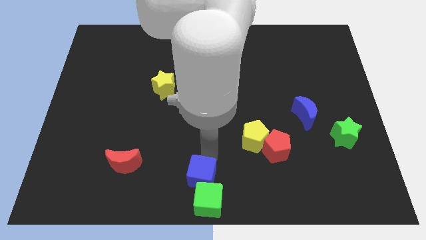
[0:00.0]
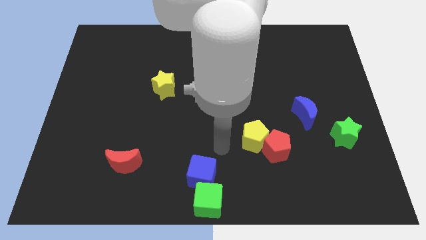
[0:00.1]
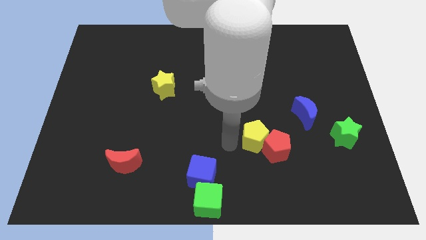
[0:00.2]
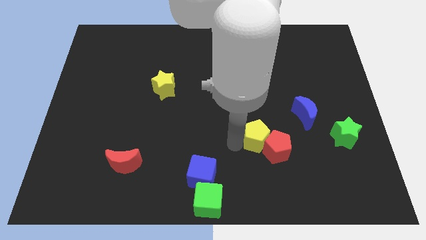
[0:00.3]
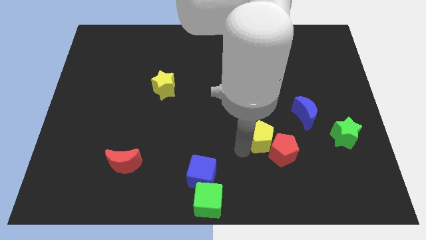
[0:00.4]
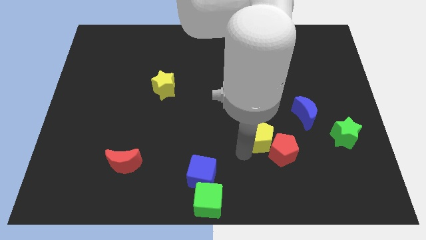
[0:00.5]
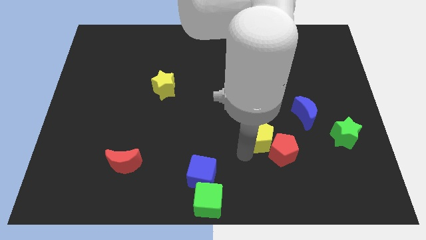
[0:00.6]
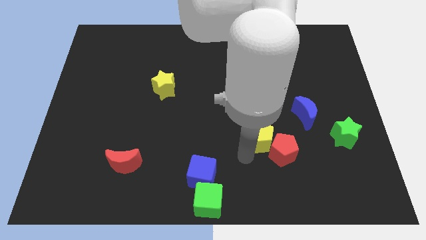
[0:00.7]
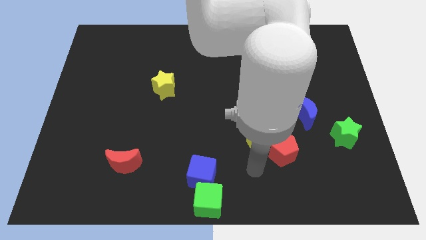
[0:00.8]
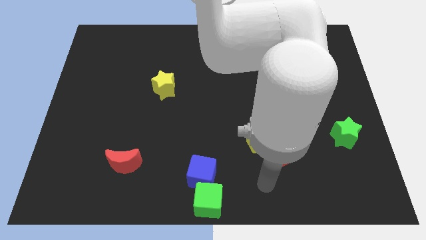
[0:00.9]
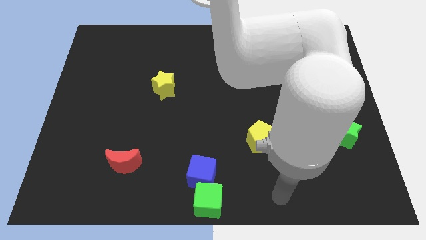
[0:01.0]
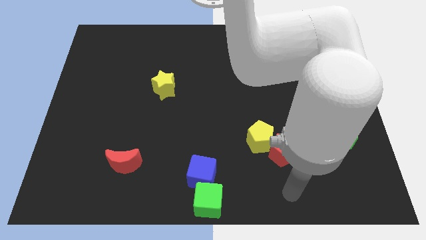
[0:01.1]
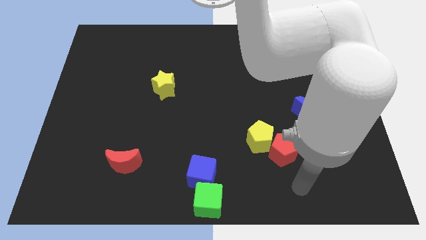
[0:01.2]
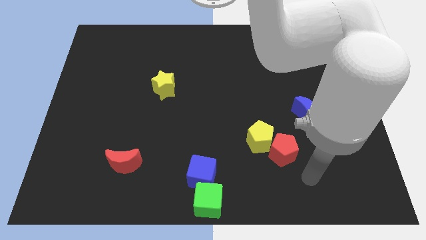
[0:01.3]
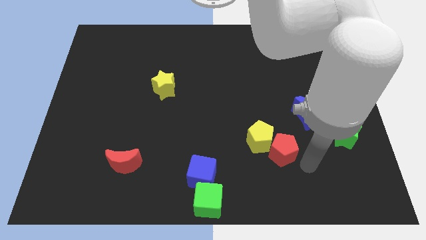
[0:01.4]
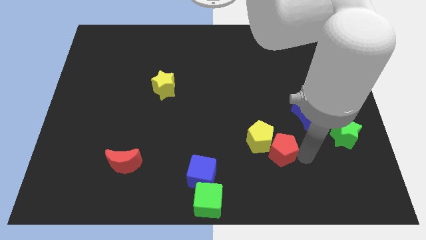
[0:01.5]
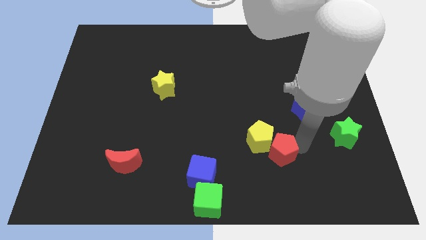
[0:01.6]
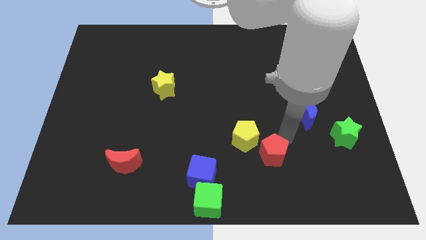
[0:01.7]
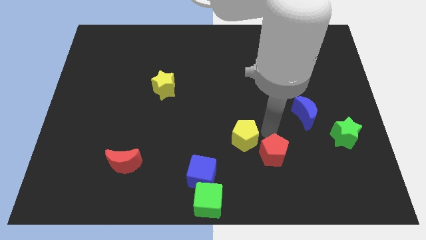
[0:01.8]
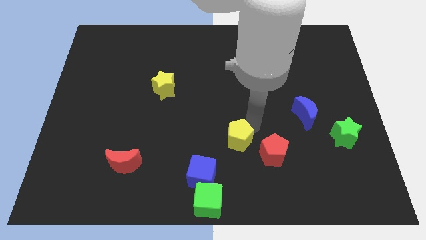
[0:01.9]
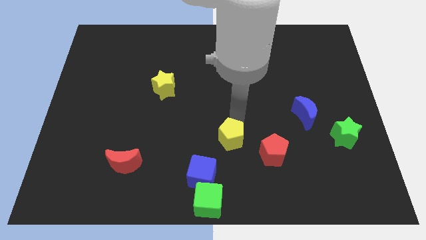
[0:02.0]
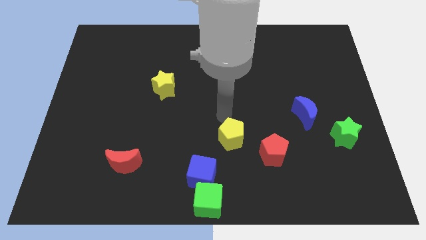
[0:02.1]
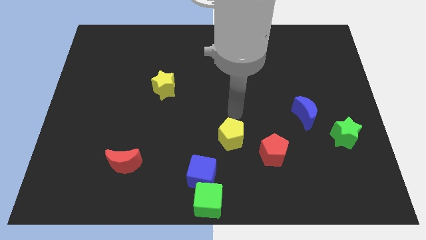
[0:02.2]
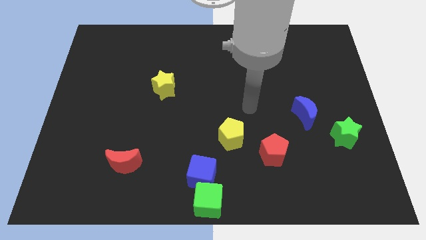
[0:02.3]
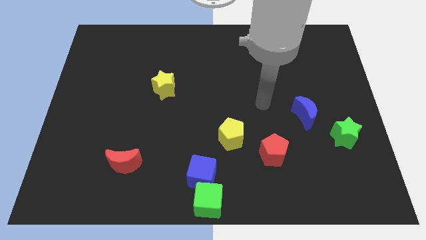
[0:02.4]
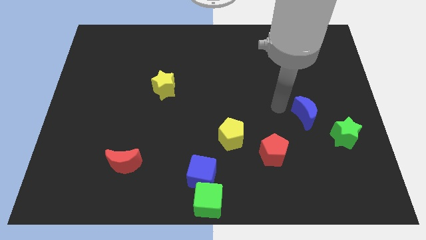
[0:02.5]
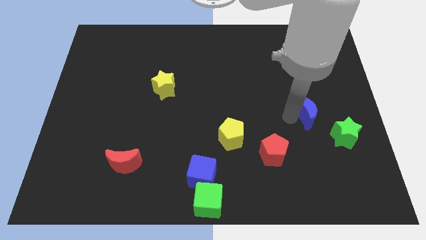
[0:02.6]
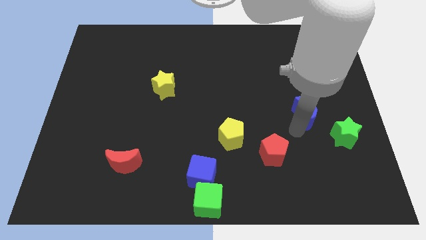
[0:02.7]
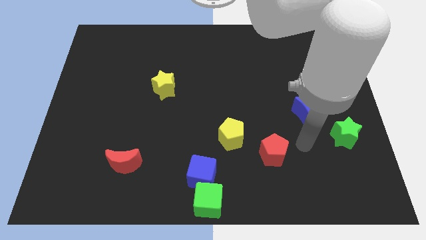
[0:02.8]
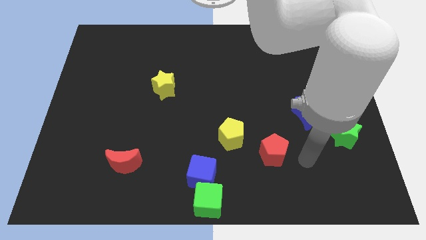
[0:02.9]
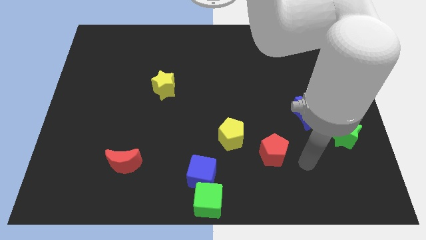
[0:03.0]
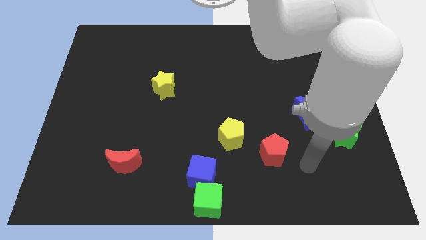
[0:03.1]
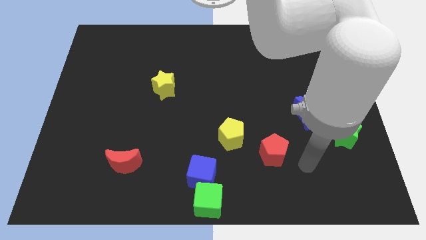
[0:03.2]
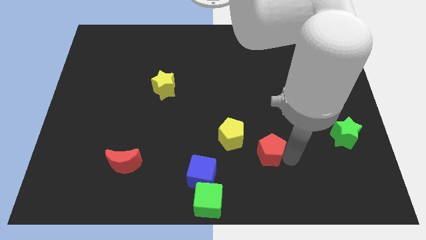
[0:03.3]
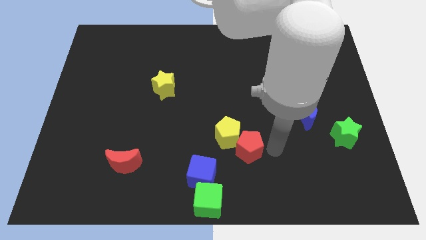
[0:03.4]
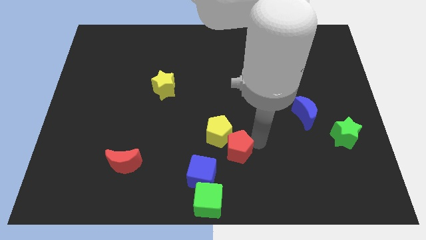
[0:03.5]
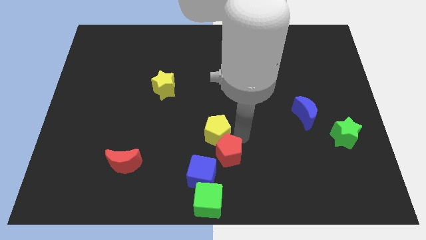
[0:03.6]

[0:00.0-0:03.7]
move the yellow pentagon and red pentagon to the top right side of the blue cube

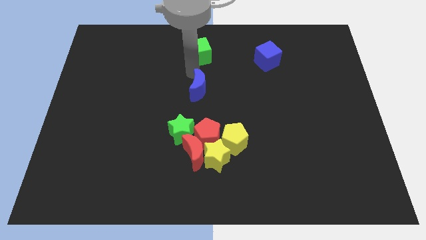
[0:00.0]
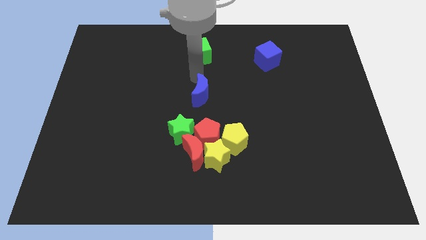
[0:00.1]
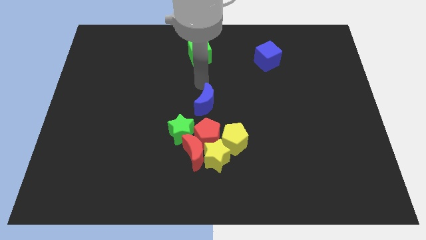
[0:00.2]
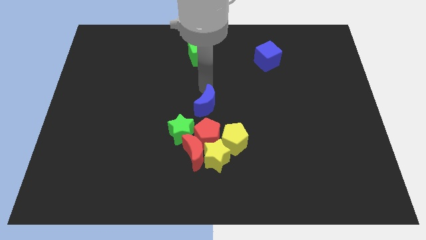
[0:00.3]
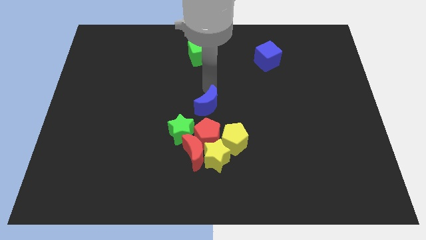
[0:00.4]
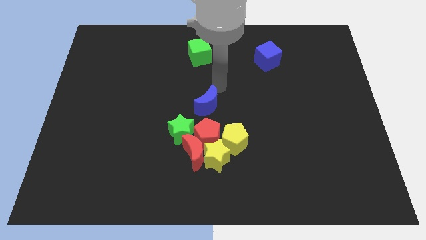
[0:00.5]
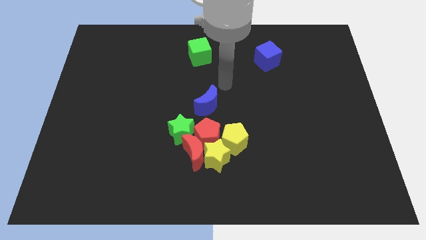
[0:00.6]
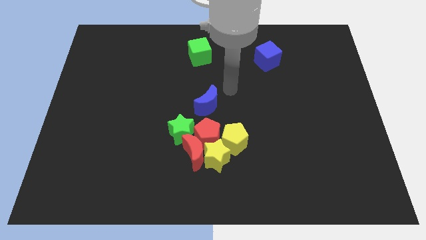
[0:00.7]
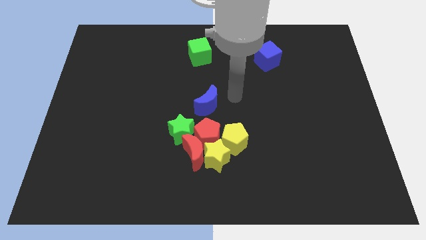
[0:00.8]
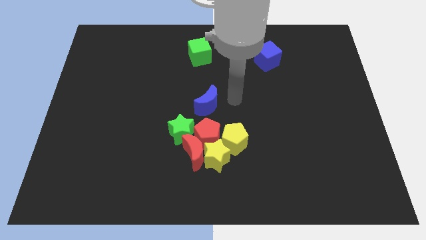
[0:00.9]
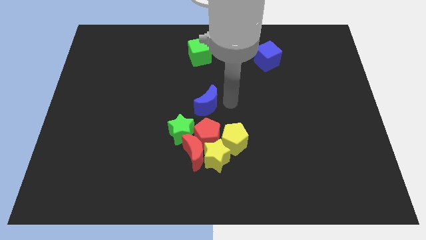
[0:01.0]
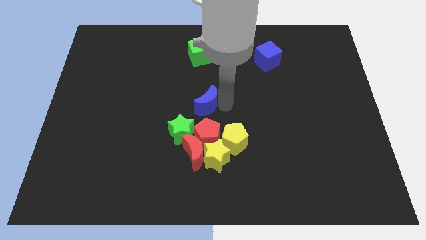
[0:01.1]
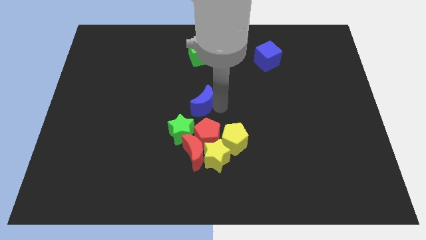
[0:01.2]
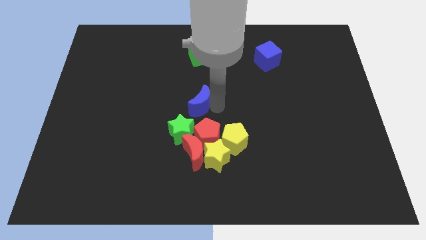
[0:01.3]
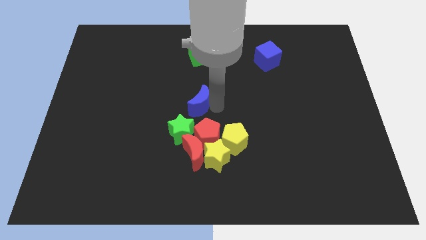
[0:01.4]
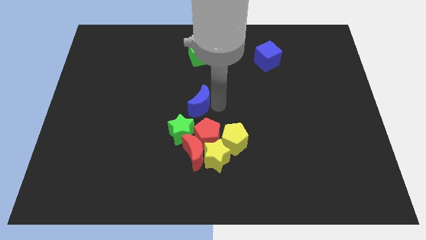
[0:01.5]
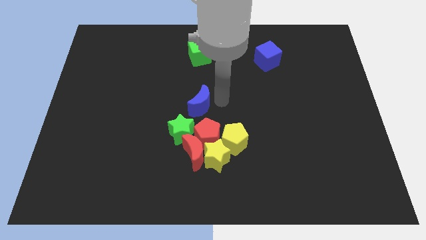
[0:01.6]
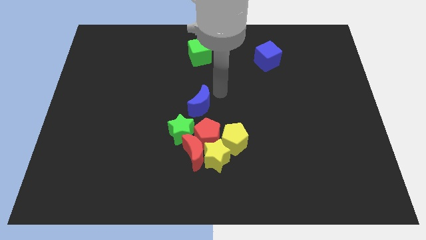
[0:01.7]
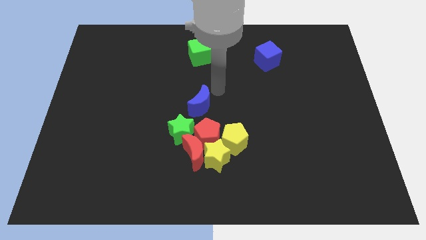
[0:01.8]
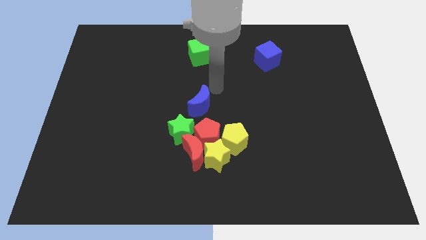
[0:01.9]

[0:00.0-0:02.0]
place blue moon to the top of red pentagon

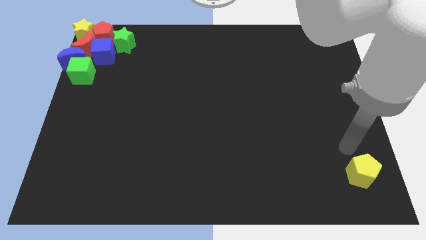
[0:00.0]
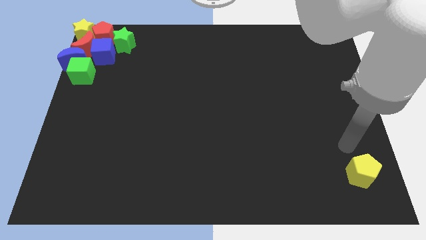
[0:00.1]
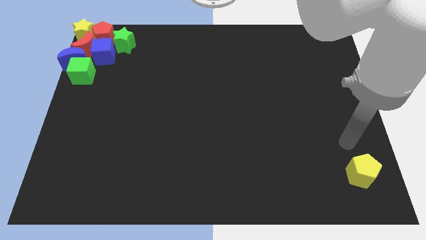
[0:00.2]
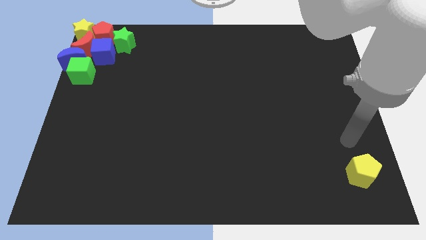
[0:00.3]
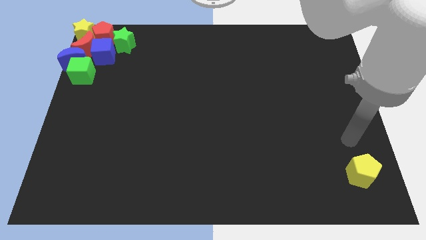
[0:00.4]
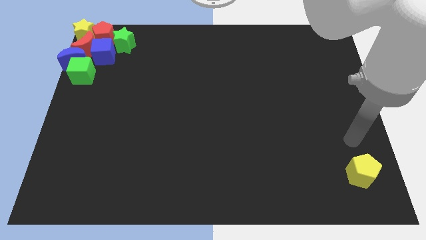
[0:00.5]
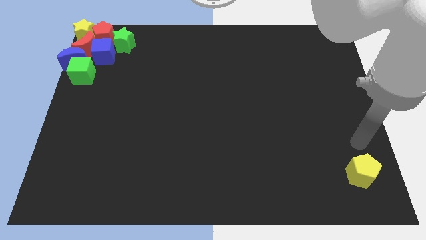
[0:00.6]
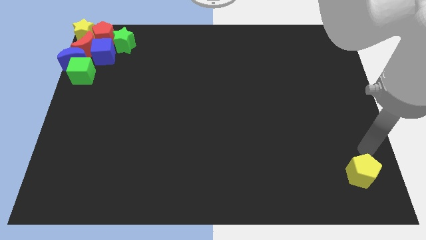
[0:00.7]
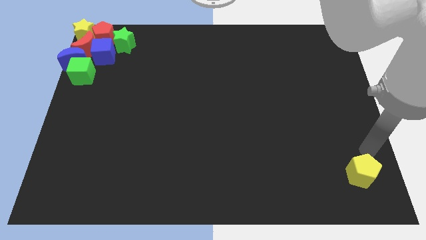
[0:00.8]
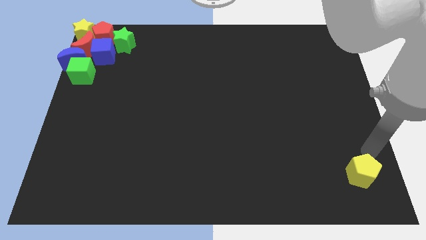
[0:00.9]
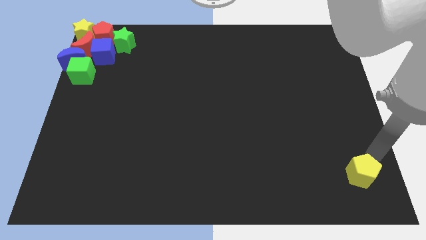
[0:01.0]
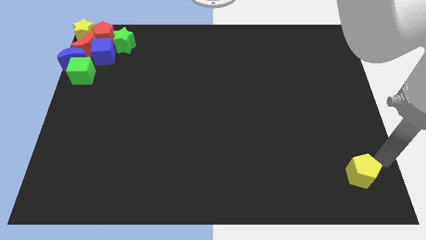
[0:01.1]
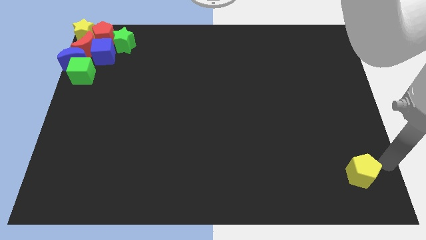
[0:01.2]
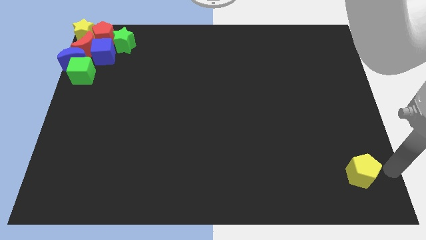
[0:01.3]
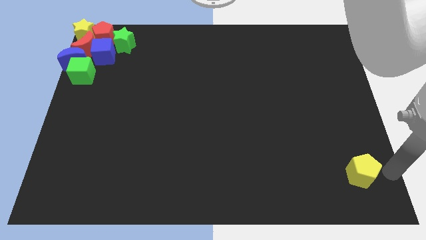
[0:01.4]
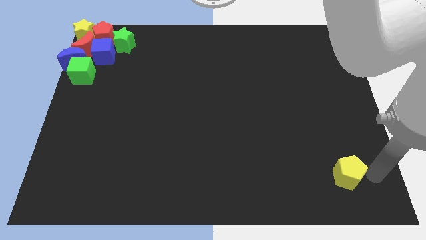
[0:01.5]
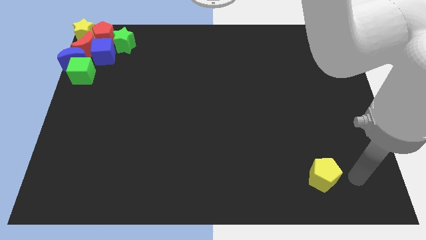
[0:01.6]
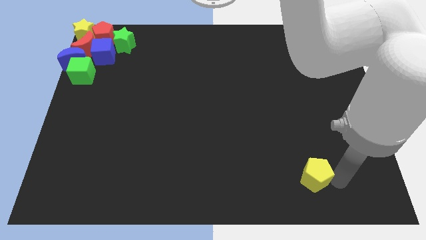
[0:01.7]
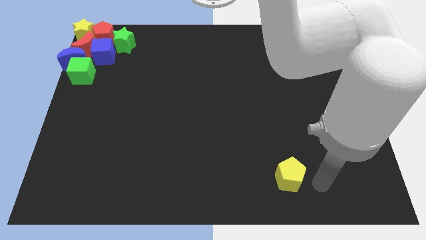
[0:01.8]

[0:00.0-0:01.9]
push the yellow pentagon slightly to the left

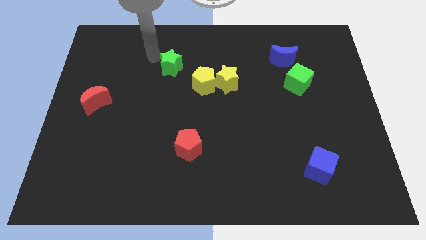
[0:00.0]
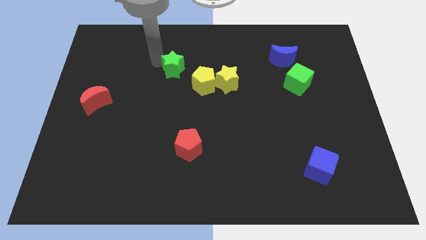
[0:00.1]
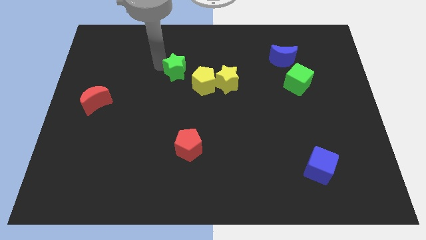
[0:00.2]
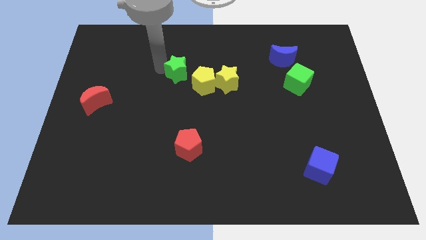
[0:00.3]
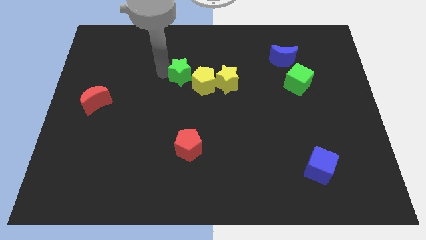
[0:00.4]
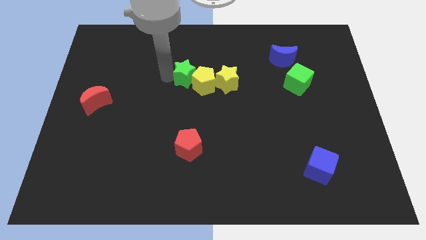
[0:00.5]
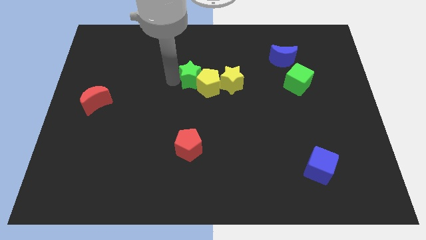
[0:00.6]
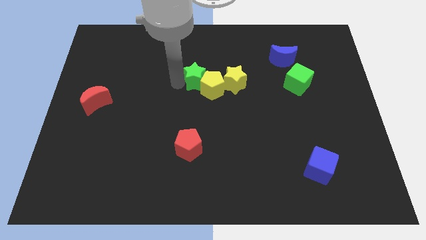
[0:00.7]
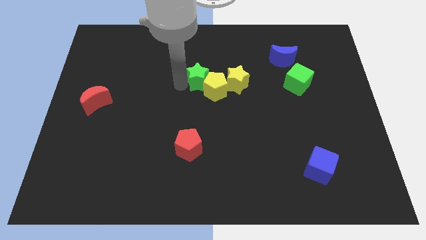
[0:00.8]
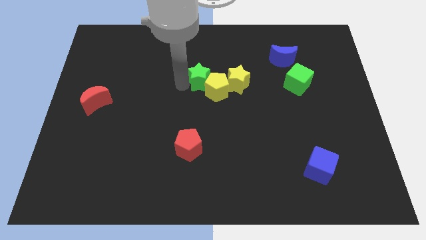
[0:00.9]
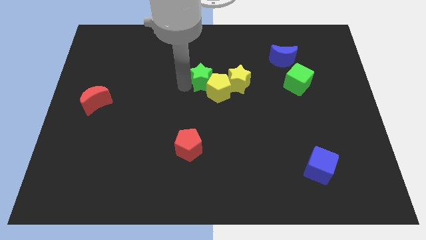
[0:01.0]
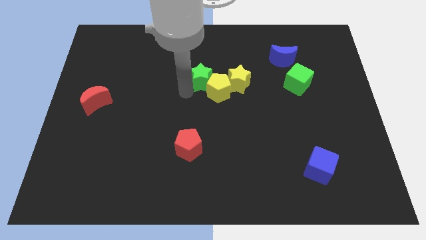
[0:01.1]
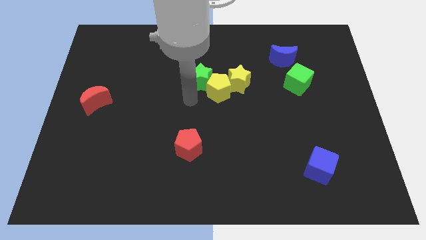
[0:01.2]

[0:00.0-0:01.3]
push green star in to yellow pentagon
